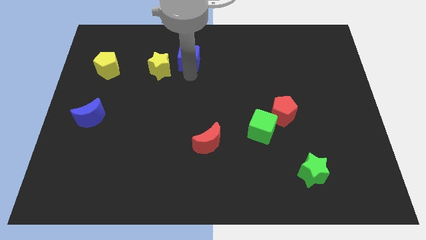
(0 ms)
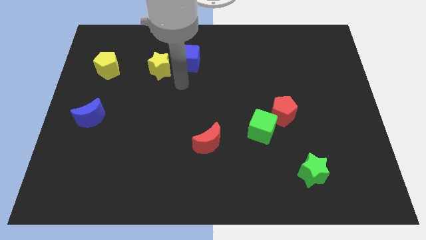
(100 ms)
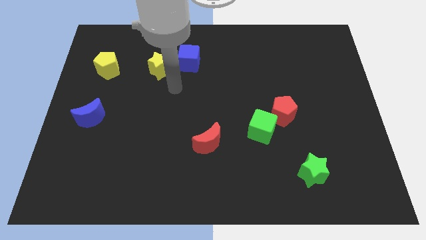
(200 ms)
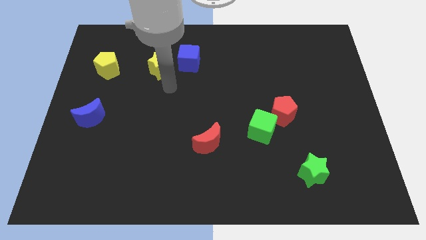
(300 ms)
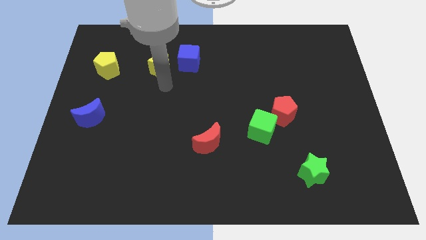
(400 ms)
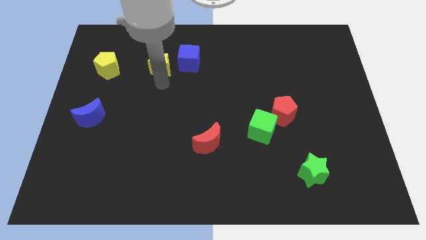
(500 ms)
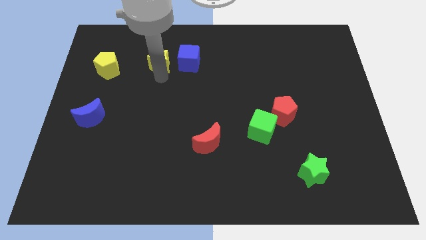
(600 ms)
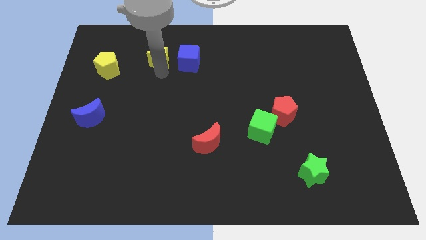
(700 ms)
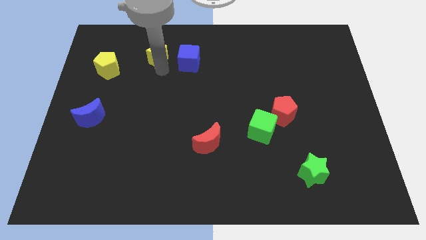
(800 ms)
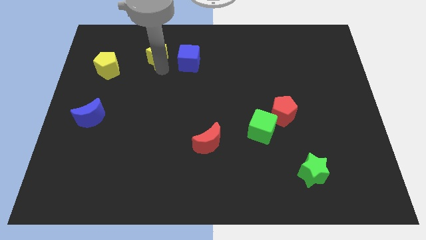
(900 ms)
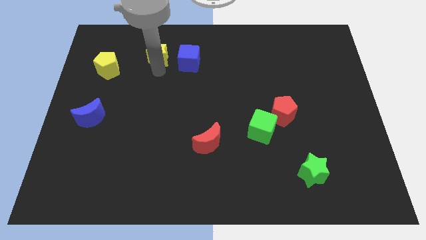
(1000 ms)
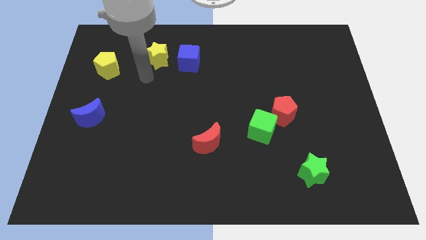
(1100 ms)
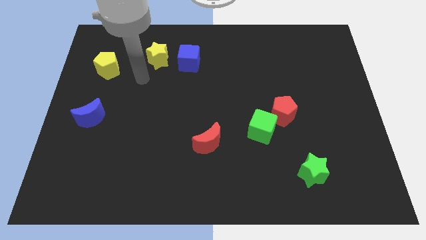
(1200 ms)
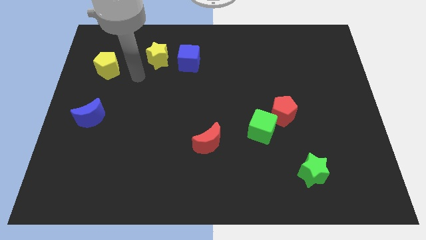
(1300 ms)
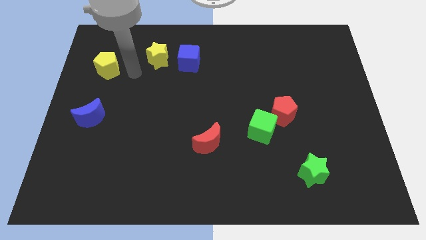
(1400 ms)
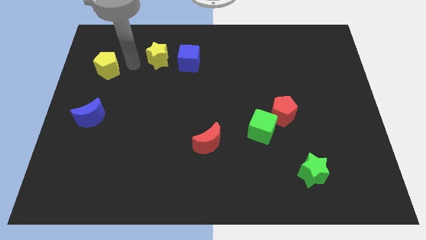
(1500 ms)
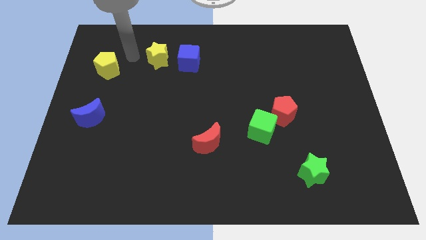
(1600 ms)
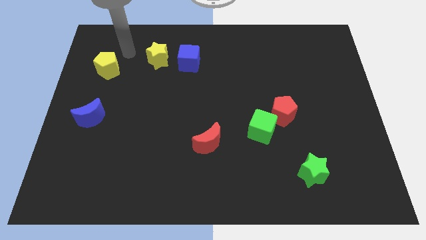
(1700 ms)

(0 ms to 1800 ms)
move the yellow star slightly to the top

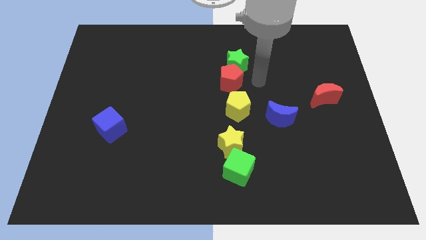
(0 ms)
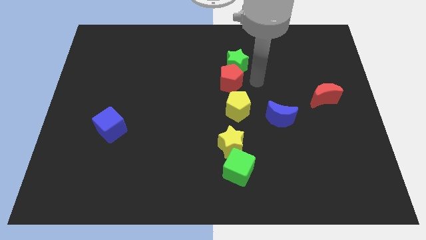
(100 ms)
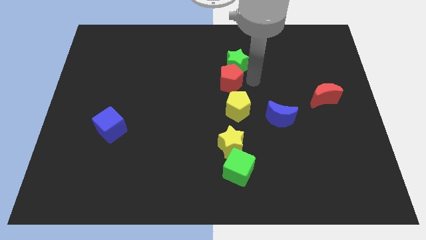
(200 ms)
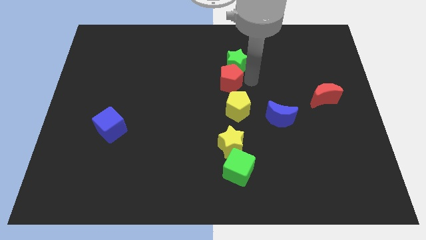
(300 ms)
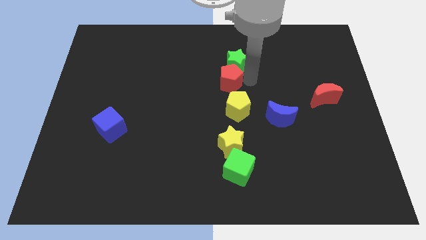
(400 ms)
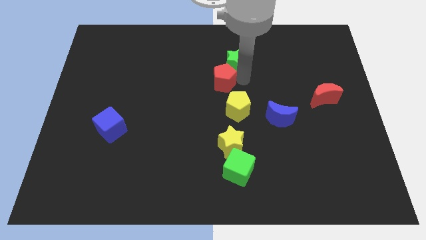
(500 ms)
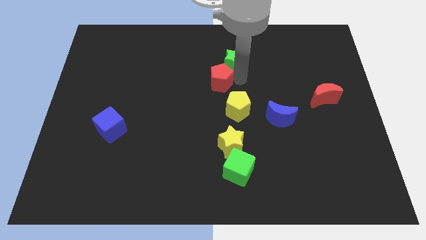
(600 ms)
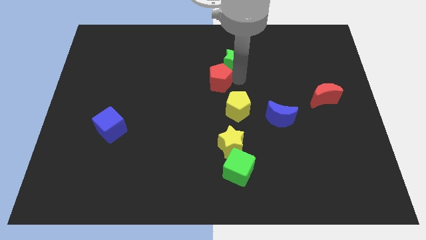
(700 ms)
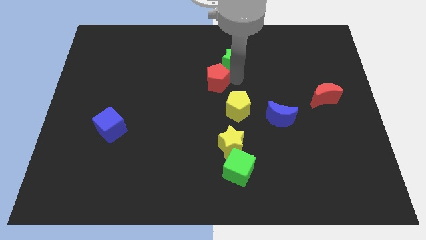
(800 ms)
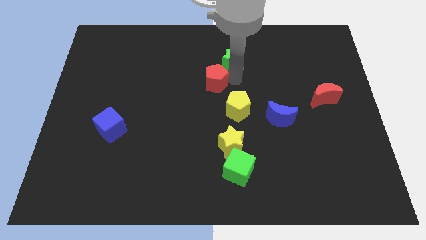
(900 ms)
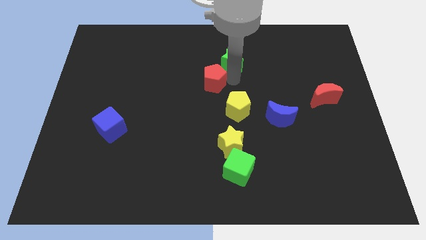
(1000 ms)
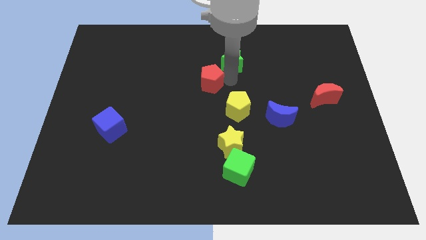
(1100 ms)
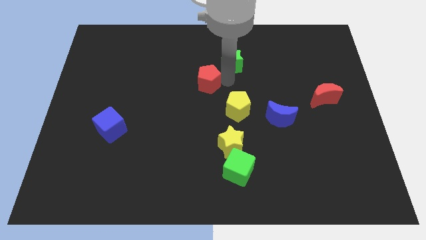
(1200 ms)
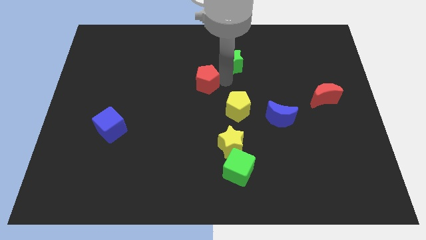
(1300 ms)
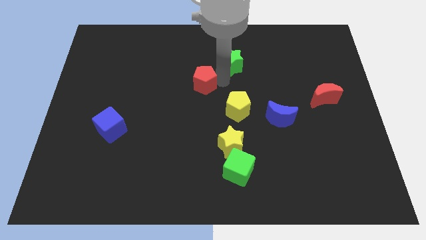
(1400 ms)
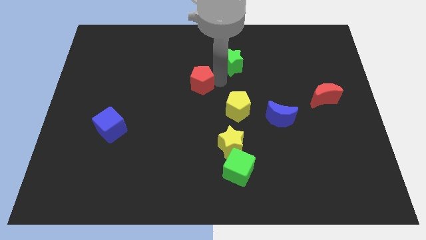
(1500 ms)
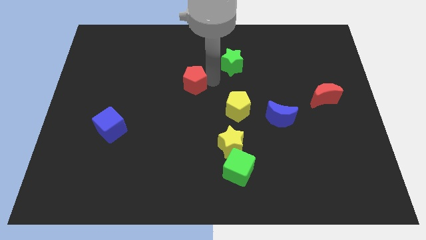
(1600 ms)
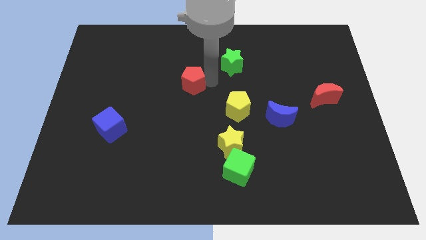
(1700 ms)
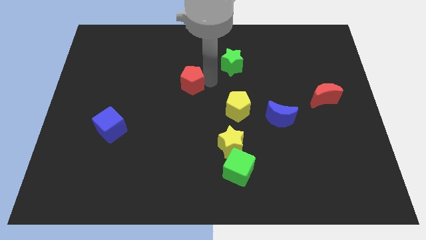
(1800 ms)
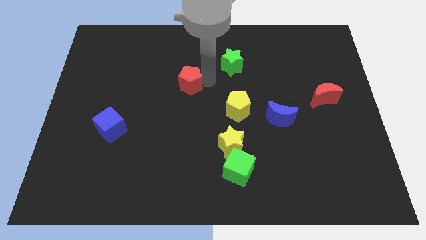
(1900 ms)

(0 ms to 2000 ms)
separate the red pentagon from the green star

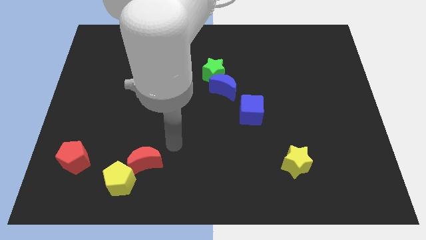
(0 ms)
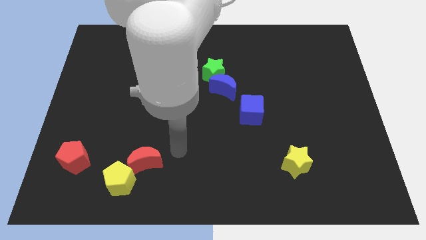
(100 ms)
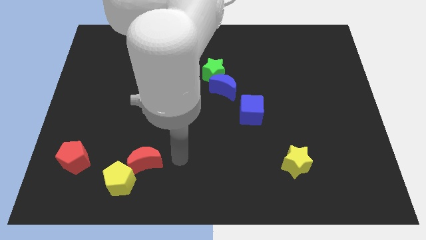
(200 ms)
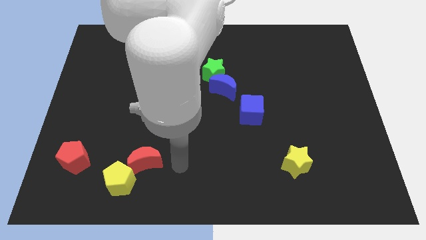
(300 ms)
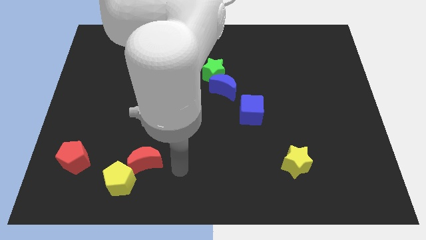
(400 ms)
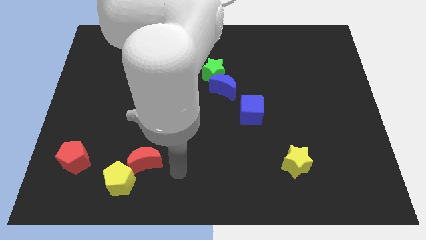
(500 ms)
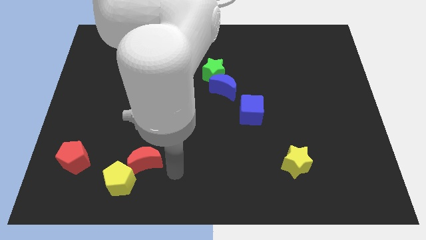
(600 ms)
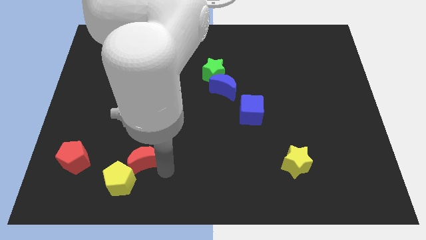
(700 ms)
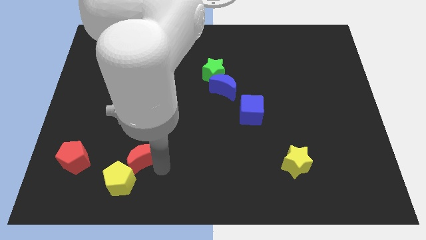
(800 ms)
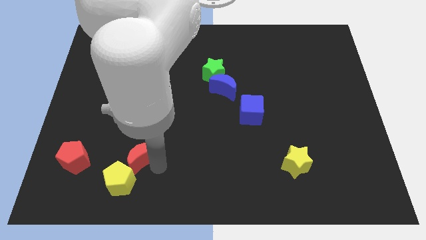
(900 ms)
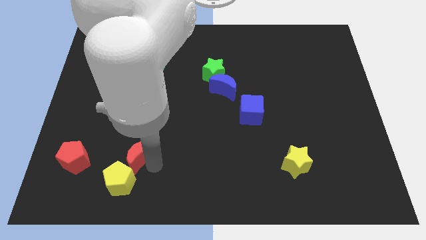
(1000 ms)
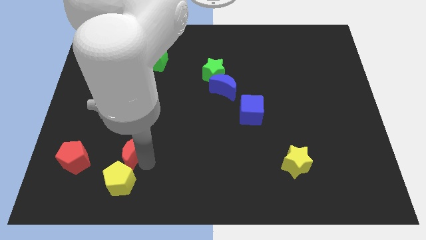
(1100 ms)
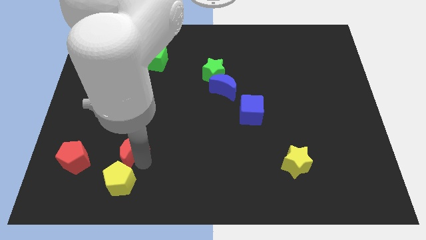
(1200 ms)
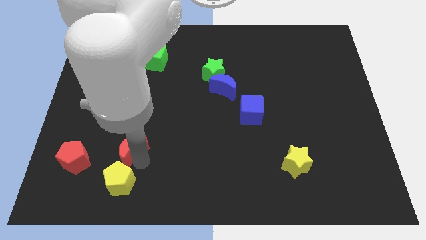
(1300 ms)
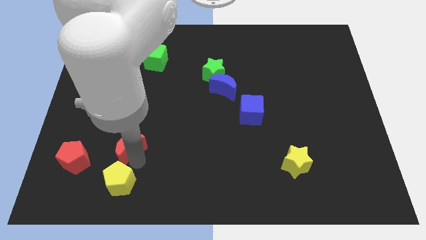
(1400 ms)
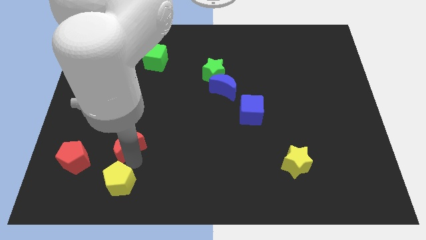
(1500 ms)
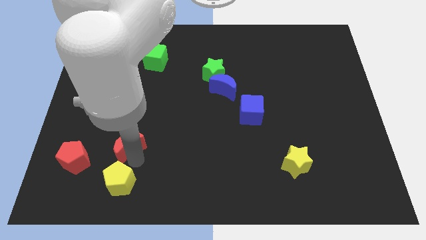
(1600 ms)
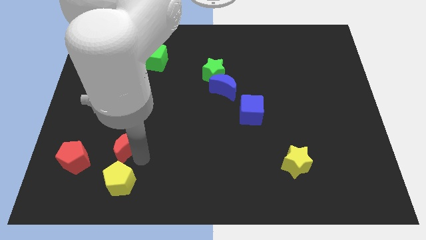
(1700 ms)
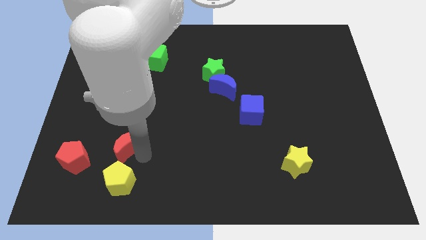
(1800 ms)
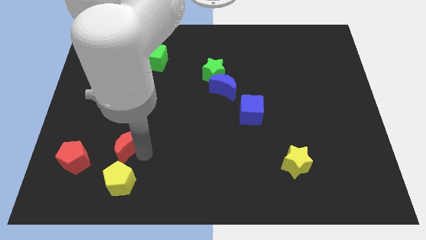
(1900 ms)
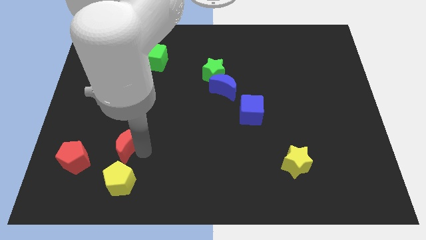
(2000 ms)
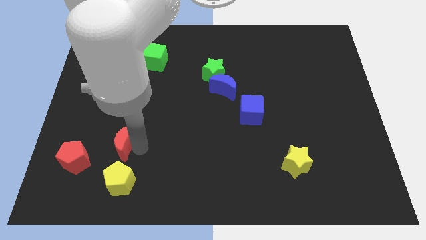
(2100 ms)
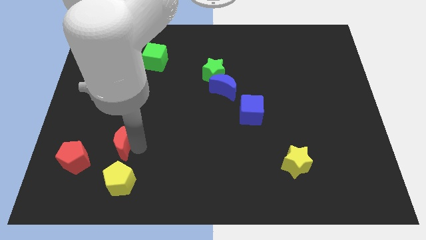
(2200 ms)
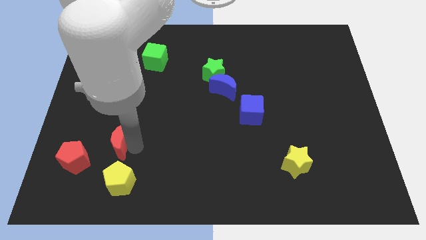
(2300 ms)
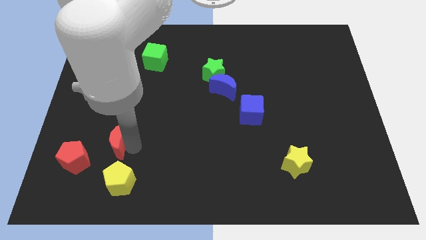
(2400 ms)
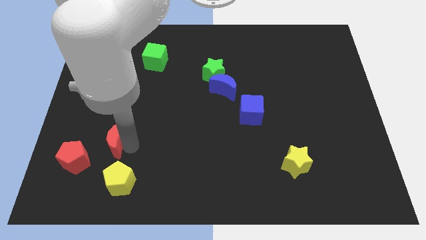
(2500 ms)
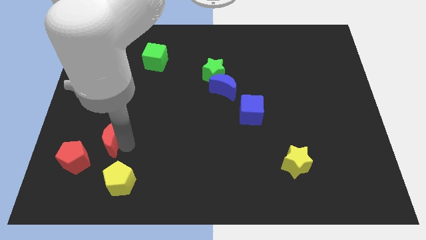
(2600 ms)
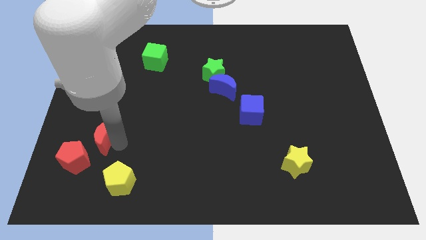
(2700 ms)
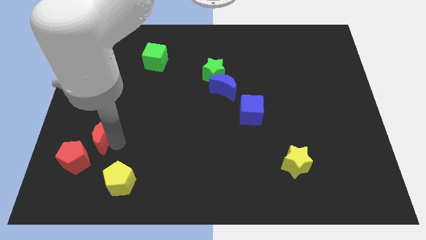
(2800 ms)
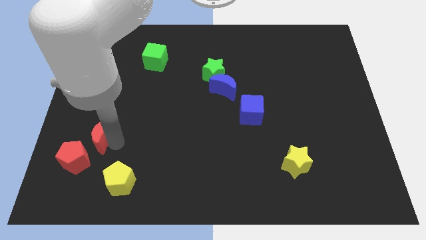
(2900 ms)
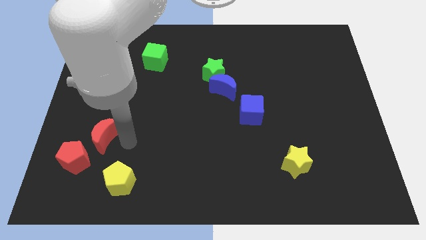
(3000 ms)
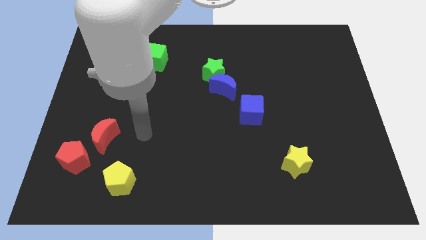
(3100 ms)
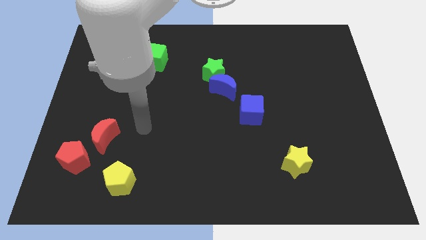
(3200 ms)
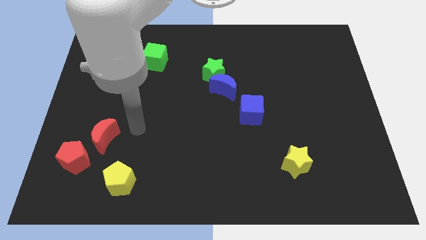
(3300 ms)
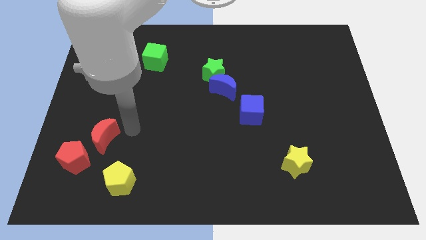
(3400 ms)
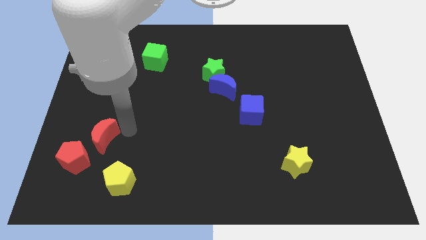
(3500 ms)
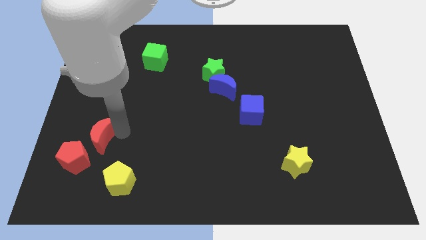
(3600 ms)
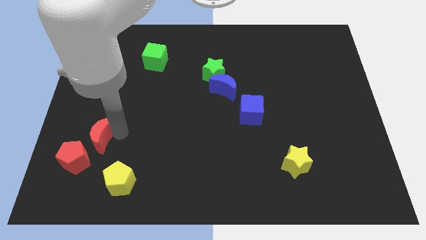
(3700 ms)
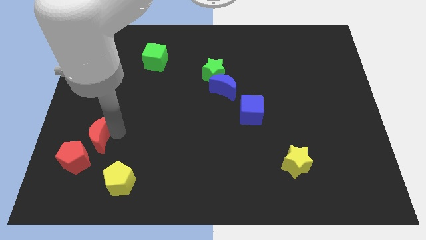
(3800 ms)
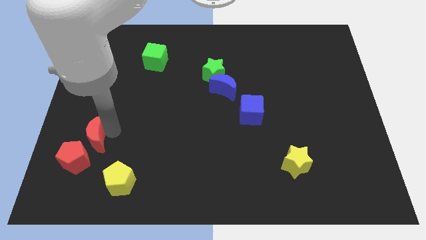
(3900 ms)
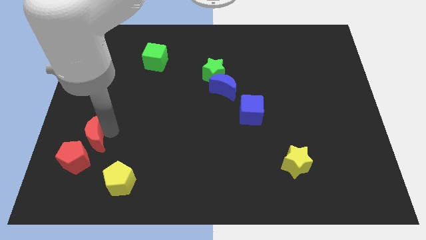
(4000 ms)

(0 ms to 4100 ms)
push red moon towards red pentagon

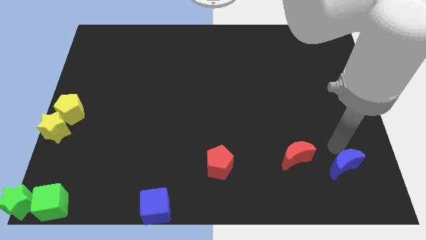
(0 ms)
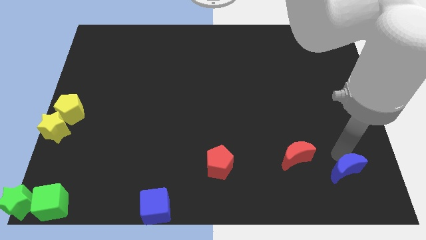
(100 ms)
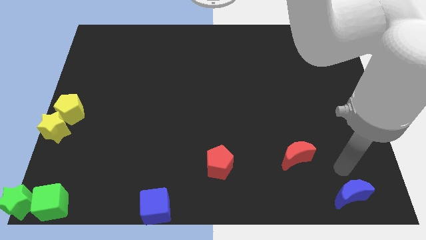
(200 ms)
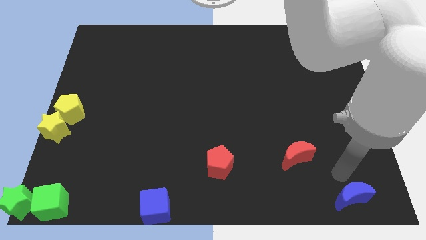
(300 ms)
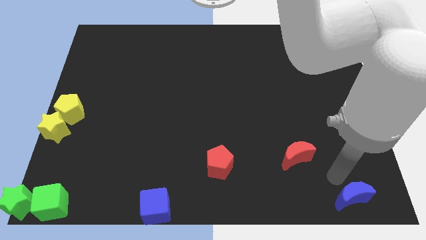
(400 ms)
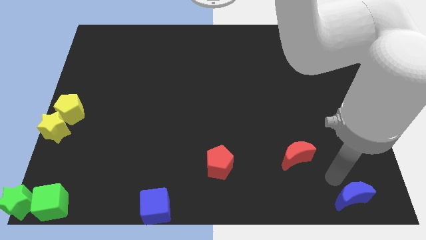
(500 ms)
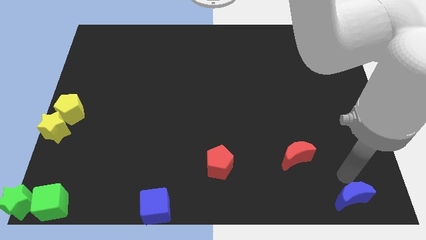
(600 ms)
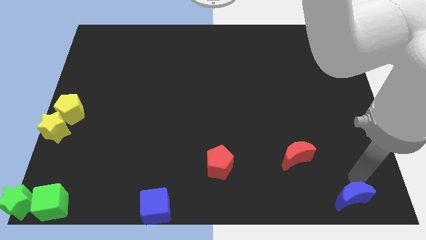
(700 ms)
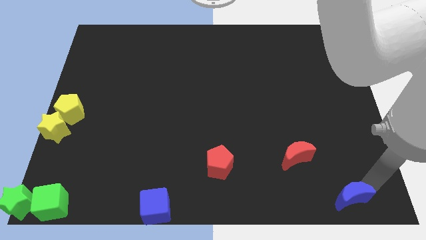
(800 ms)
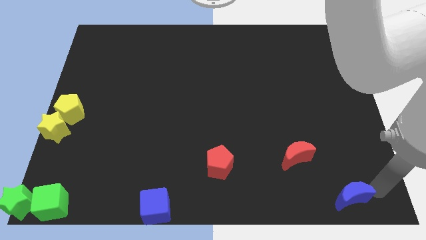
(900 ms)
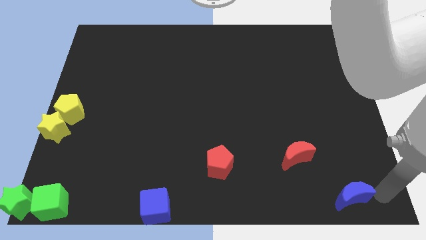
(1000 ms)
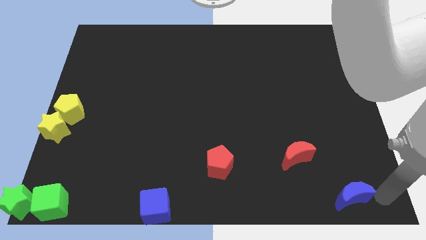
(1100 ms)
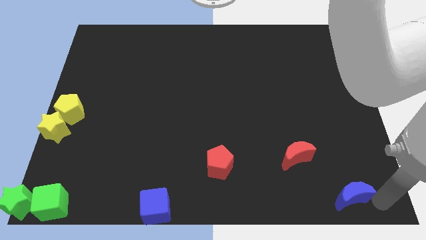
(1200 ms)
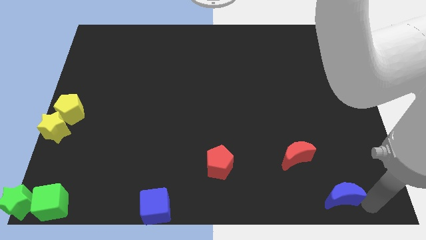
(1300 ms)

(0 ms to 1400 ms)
place the blue crescent diagonal to the blue cube
